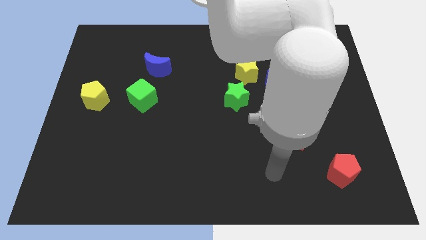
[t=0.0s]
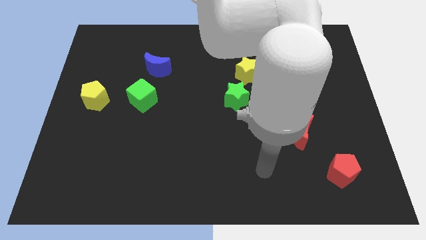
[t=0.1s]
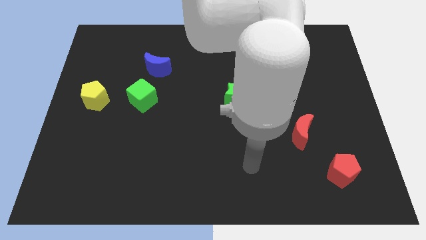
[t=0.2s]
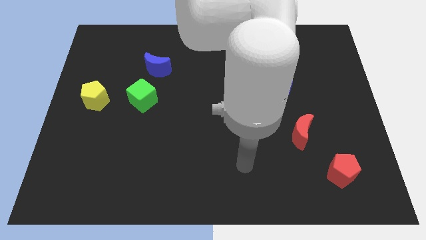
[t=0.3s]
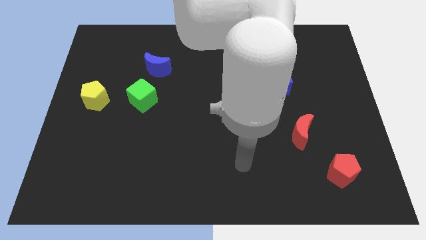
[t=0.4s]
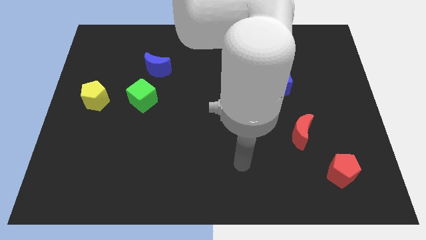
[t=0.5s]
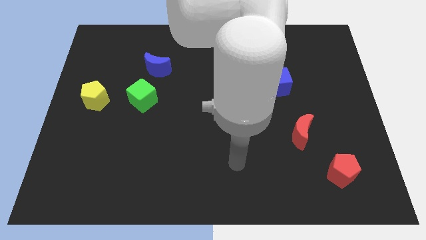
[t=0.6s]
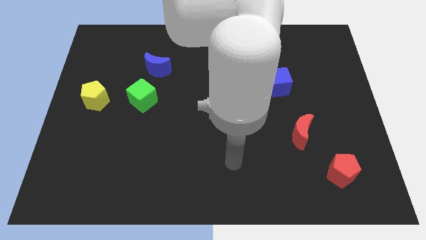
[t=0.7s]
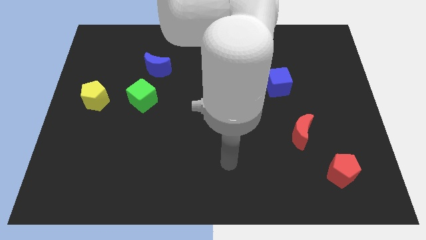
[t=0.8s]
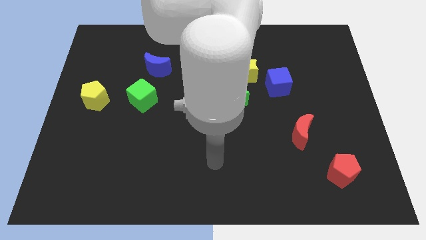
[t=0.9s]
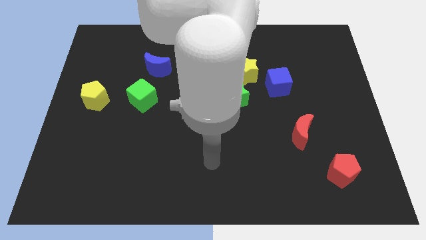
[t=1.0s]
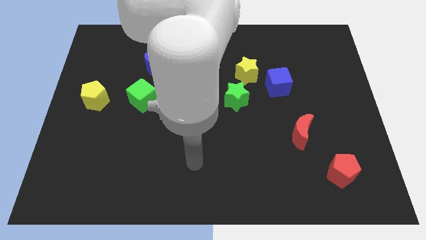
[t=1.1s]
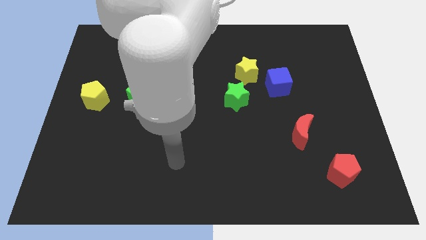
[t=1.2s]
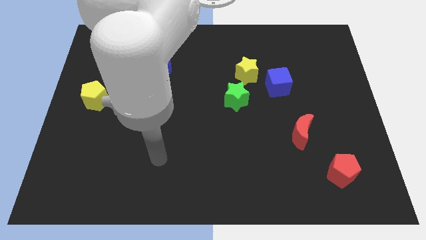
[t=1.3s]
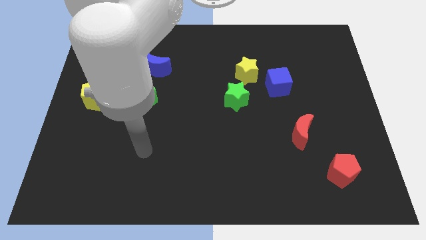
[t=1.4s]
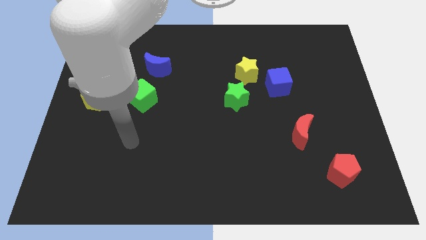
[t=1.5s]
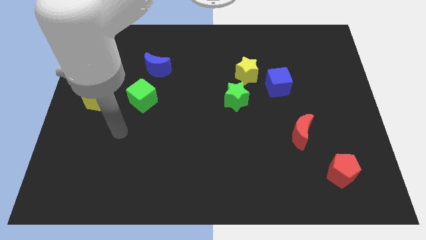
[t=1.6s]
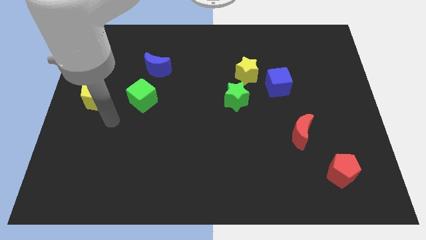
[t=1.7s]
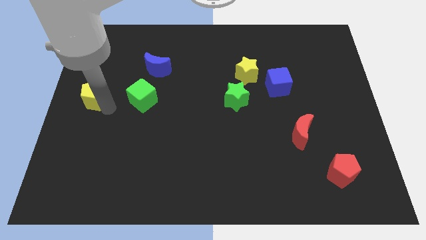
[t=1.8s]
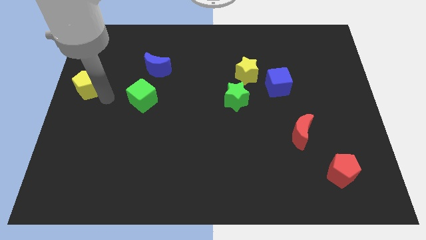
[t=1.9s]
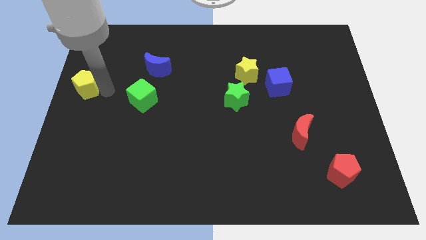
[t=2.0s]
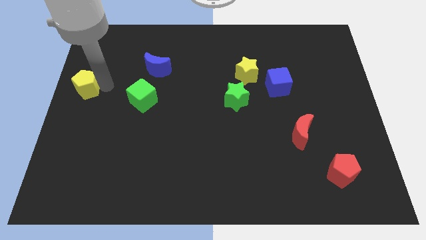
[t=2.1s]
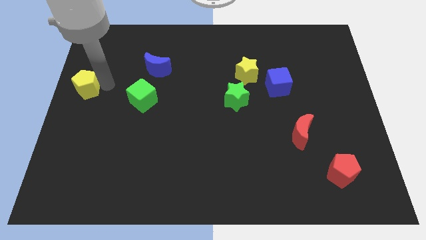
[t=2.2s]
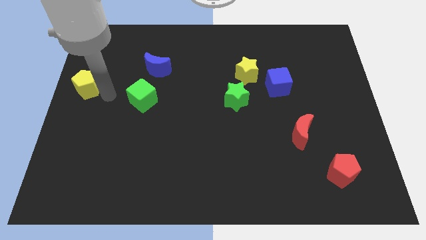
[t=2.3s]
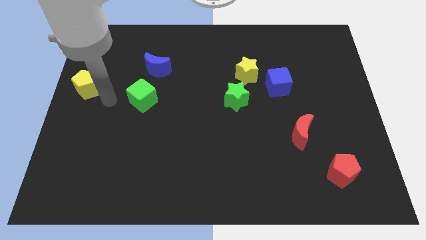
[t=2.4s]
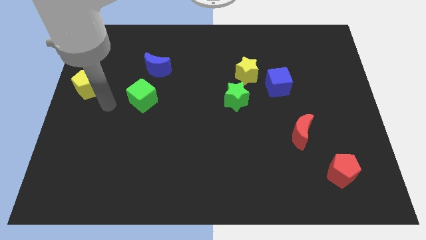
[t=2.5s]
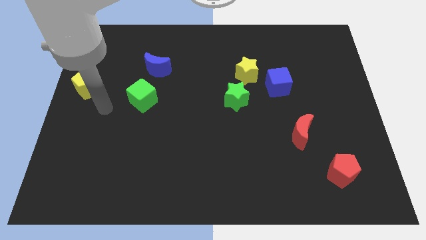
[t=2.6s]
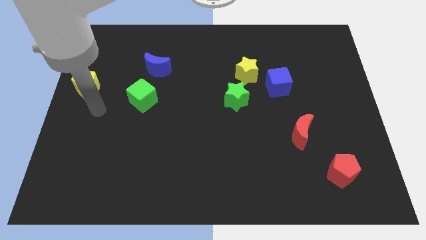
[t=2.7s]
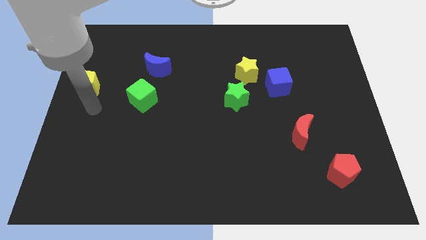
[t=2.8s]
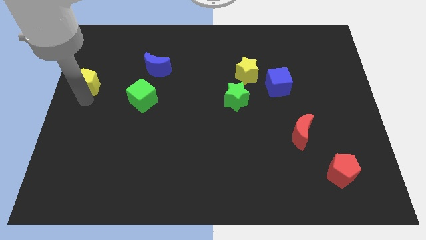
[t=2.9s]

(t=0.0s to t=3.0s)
push the yellow pentagon slightly

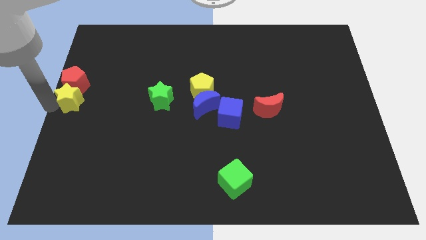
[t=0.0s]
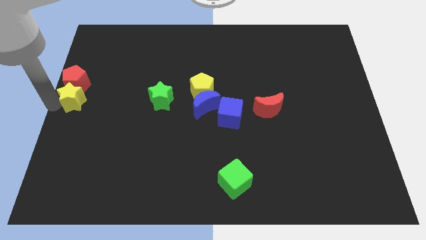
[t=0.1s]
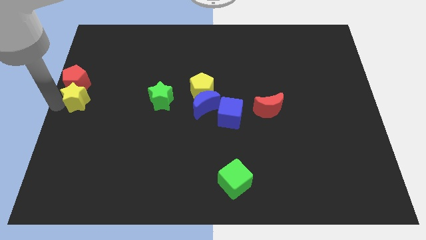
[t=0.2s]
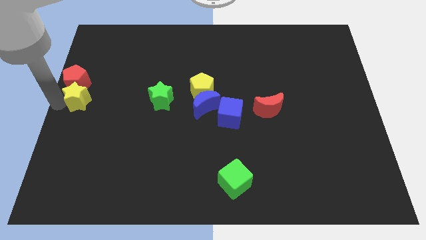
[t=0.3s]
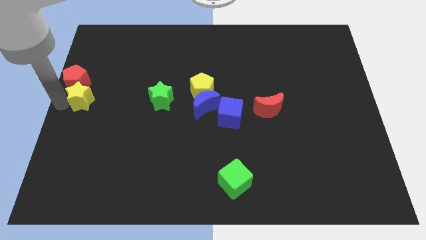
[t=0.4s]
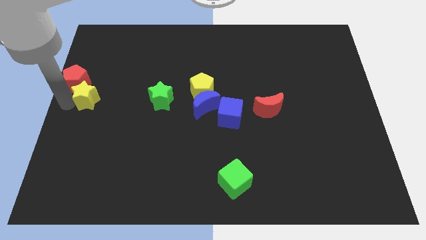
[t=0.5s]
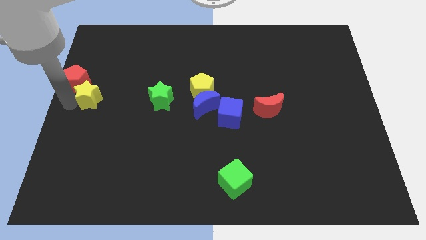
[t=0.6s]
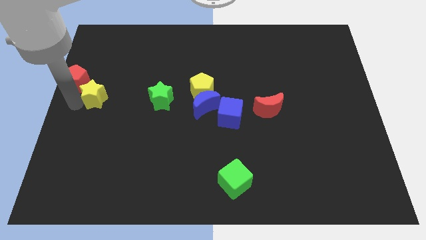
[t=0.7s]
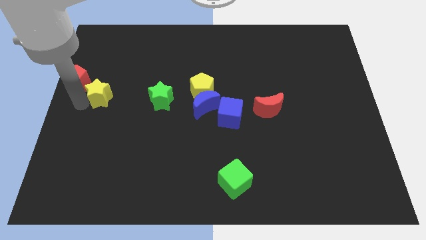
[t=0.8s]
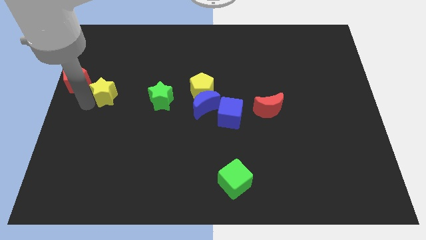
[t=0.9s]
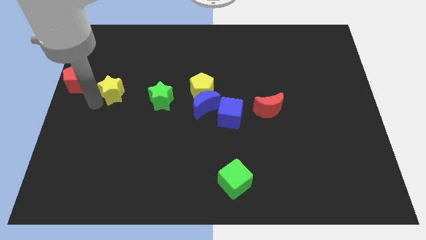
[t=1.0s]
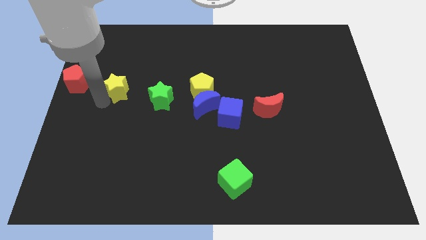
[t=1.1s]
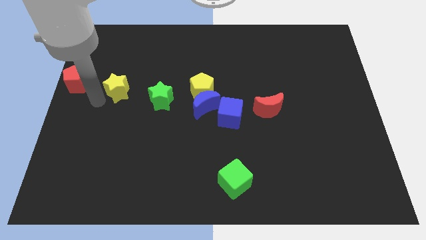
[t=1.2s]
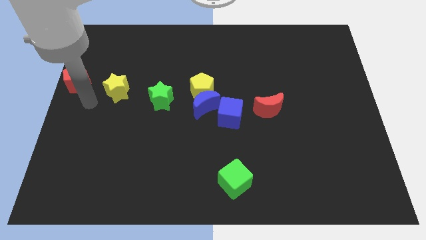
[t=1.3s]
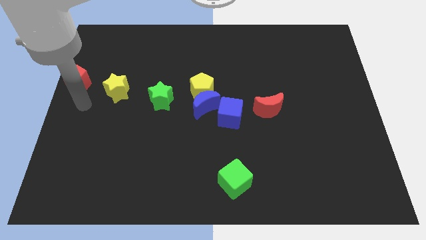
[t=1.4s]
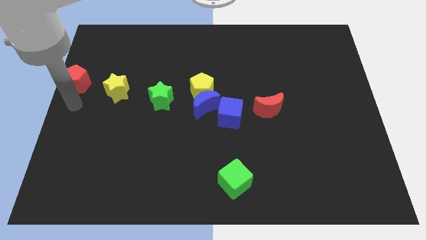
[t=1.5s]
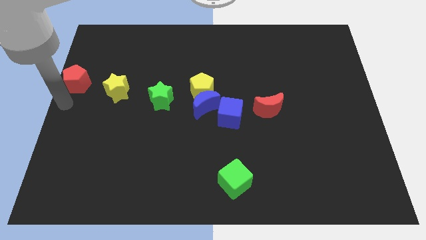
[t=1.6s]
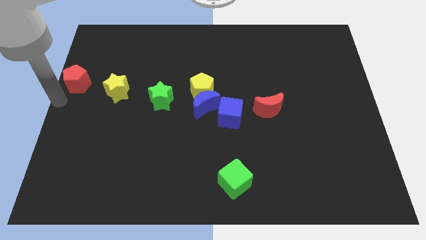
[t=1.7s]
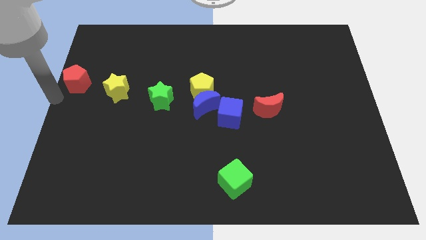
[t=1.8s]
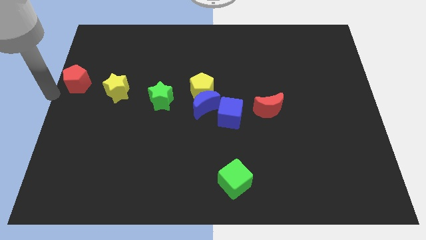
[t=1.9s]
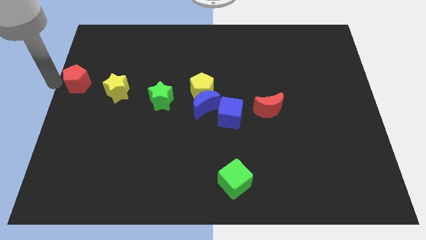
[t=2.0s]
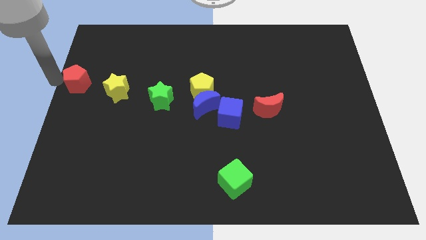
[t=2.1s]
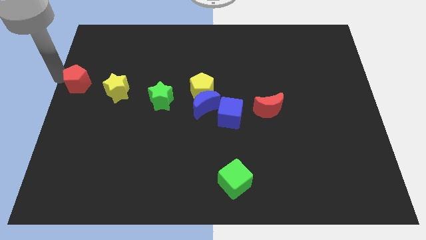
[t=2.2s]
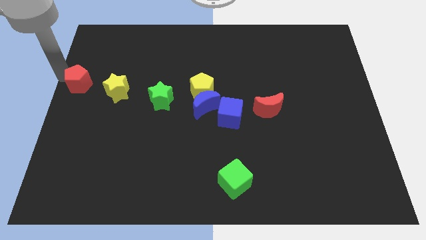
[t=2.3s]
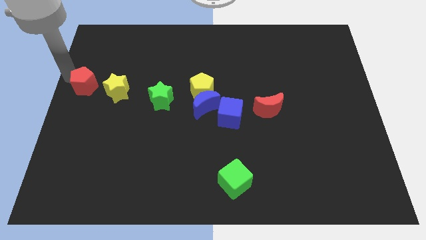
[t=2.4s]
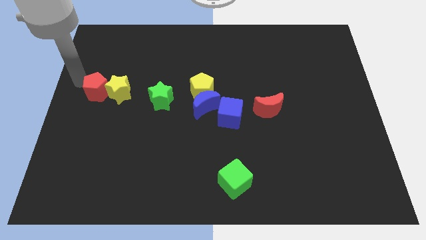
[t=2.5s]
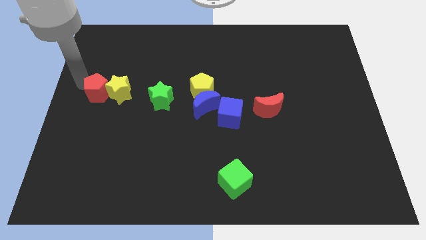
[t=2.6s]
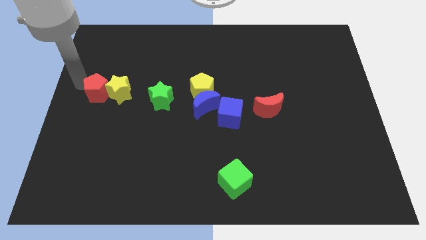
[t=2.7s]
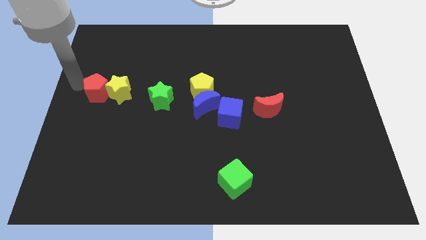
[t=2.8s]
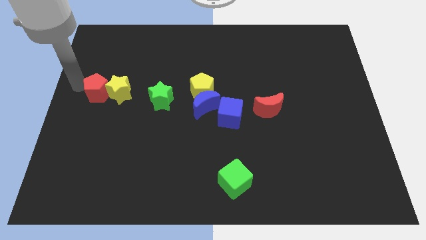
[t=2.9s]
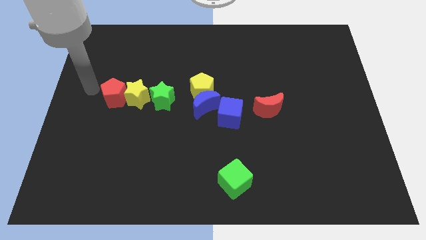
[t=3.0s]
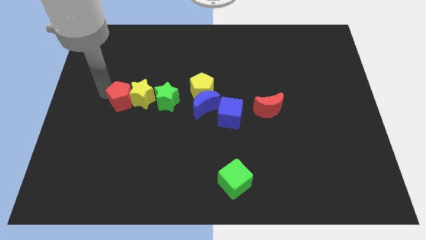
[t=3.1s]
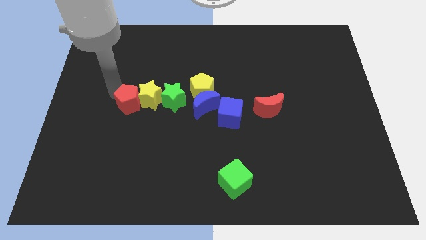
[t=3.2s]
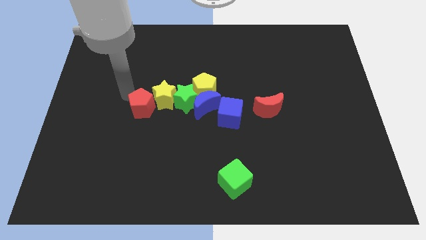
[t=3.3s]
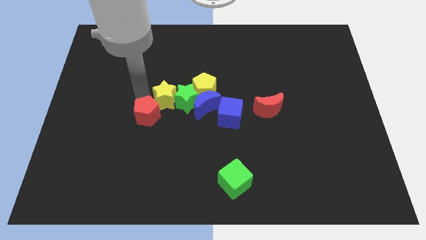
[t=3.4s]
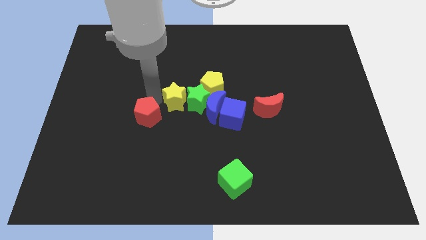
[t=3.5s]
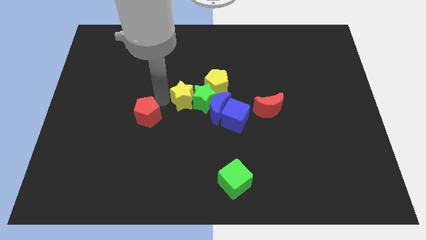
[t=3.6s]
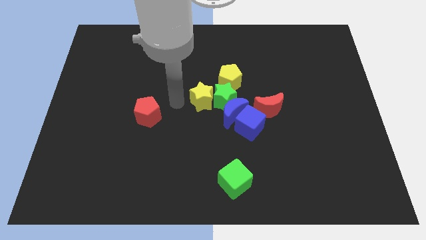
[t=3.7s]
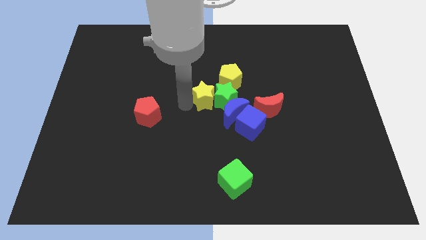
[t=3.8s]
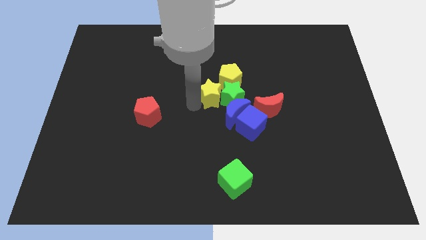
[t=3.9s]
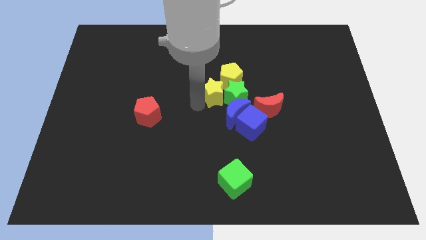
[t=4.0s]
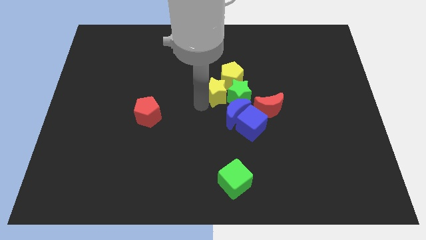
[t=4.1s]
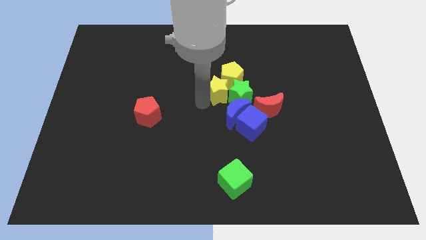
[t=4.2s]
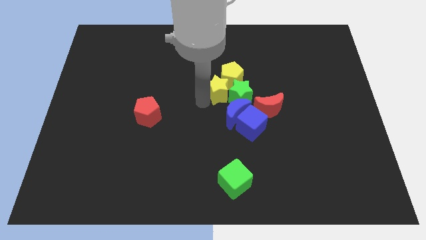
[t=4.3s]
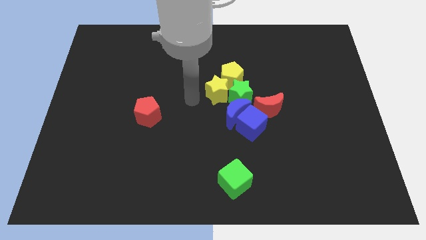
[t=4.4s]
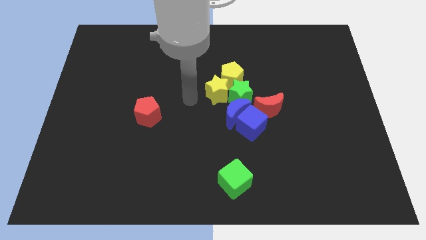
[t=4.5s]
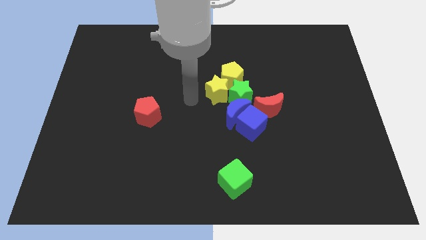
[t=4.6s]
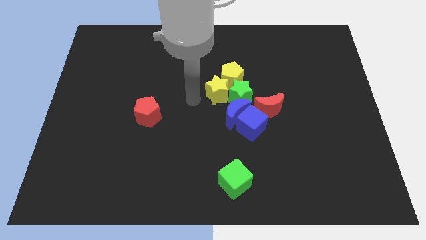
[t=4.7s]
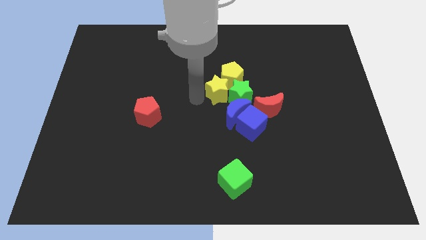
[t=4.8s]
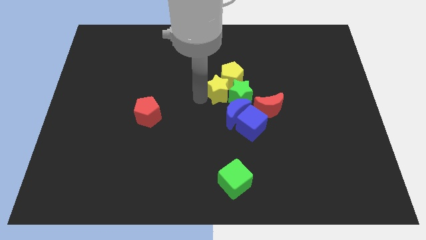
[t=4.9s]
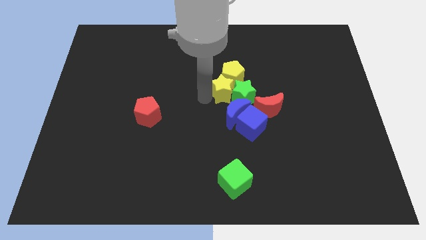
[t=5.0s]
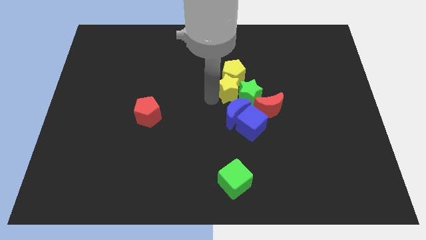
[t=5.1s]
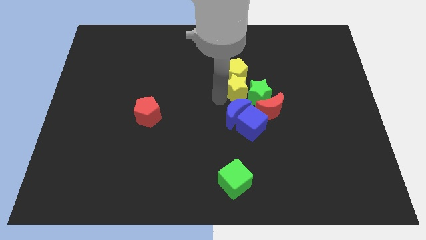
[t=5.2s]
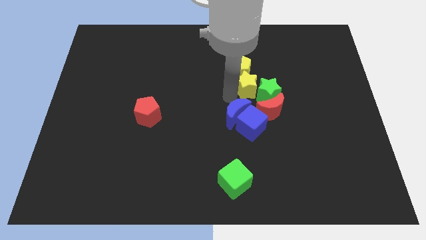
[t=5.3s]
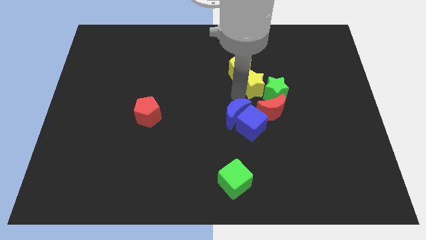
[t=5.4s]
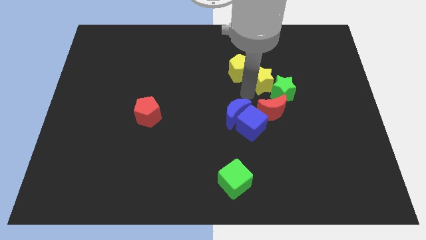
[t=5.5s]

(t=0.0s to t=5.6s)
place yellow star into the green star

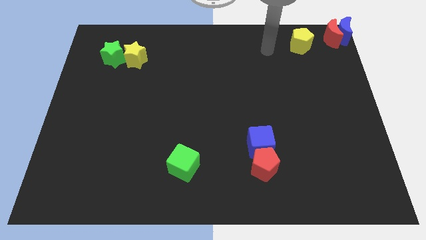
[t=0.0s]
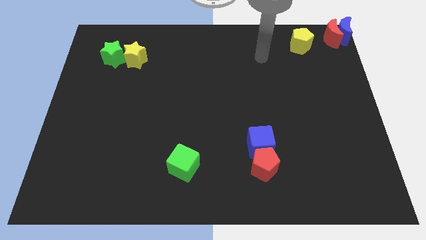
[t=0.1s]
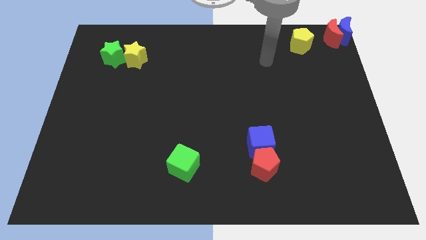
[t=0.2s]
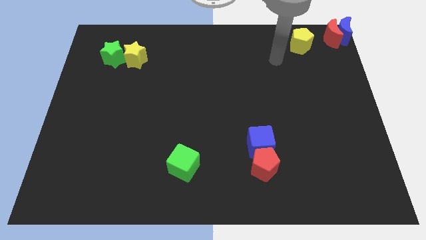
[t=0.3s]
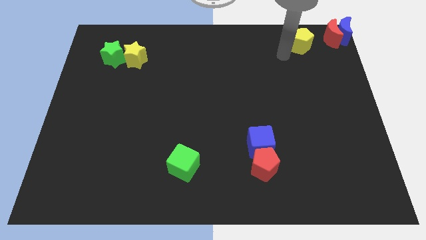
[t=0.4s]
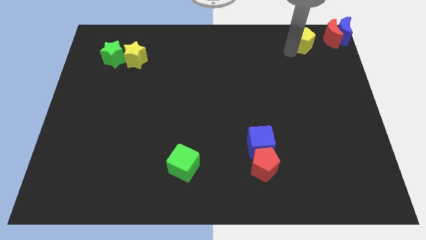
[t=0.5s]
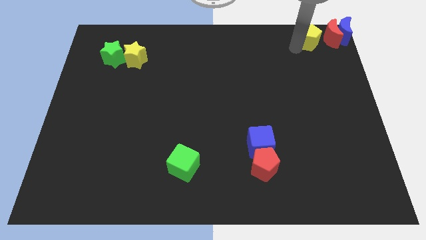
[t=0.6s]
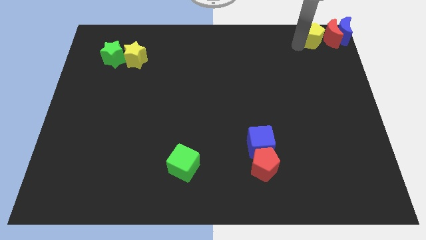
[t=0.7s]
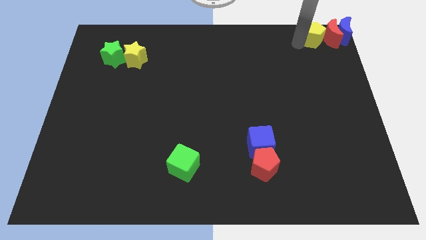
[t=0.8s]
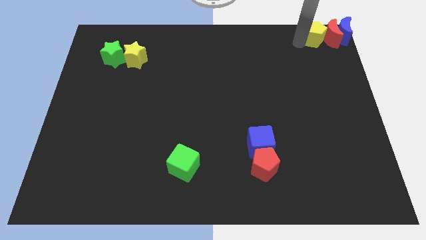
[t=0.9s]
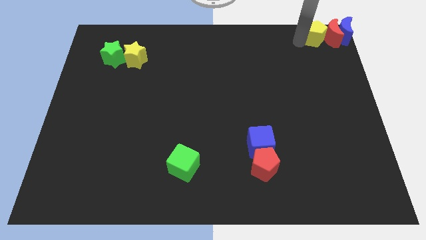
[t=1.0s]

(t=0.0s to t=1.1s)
add yellow pentagon into red moon
